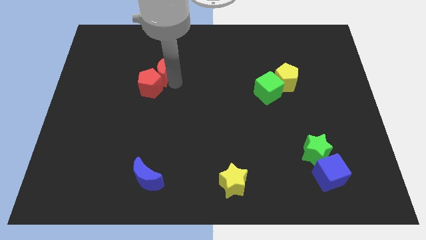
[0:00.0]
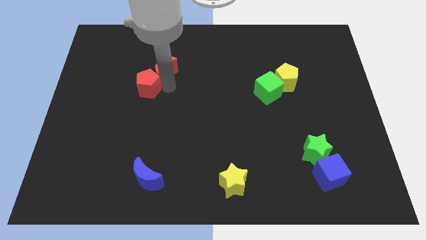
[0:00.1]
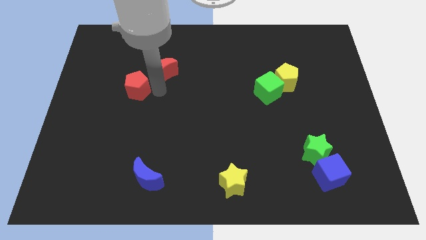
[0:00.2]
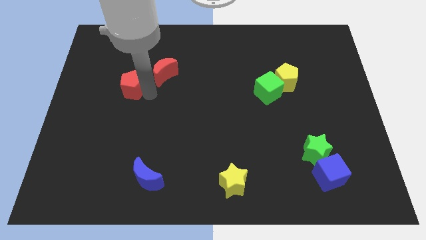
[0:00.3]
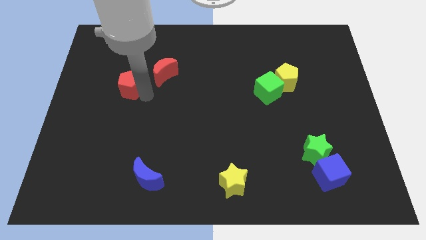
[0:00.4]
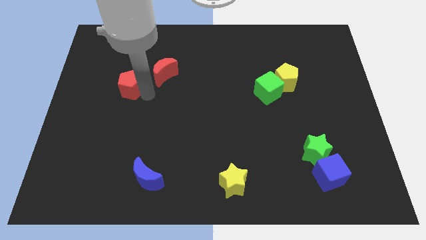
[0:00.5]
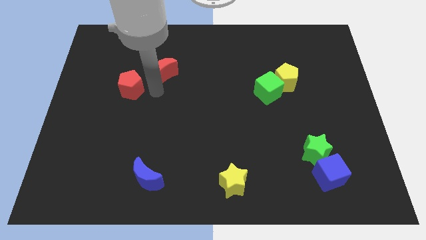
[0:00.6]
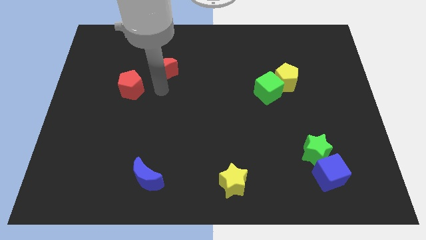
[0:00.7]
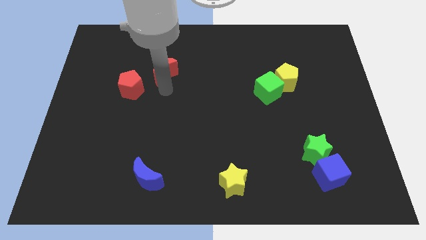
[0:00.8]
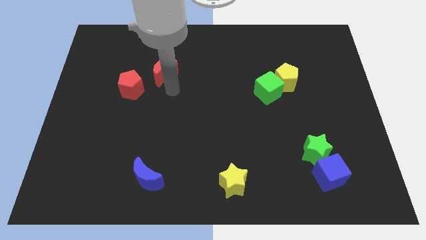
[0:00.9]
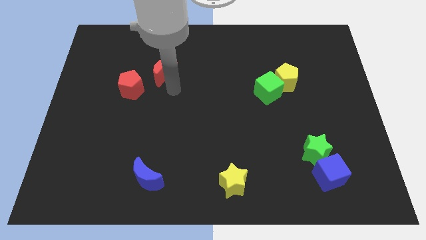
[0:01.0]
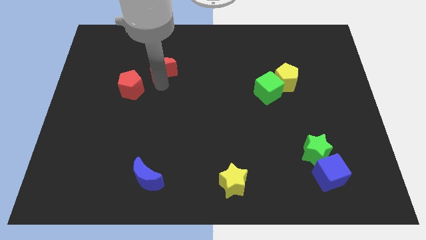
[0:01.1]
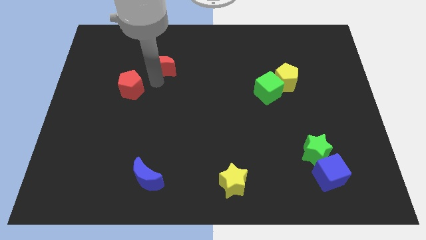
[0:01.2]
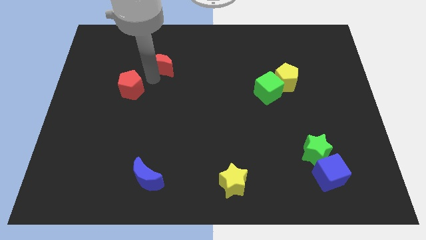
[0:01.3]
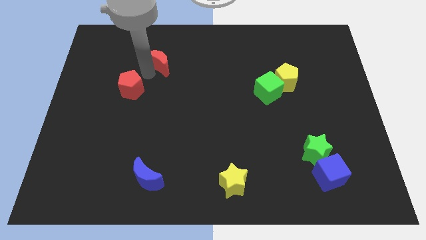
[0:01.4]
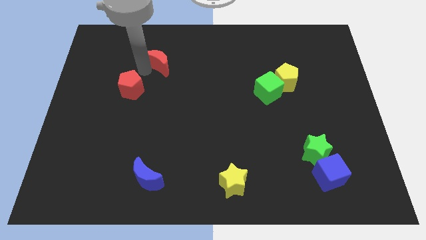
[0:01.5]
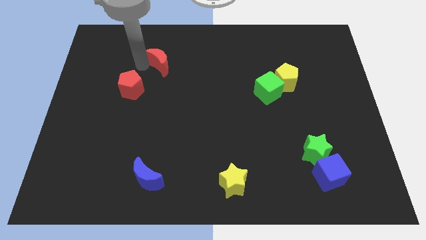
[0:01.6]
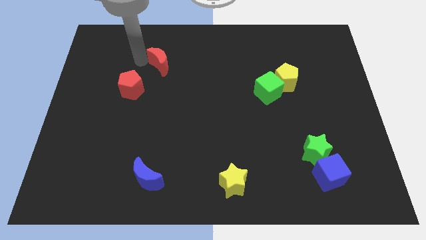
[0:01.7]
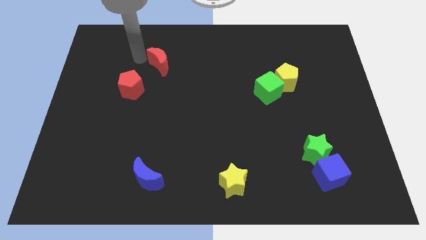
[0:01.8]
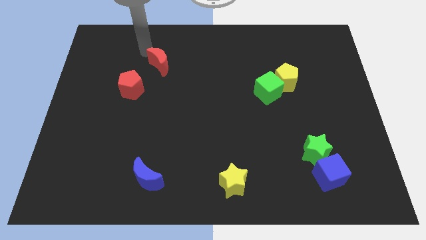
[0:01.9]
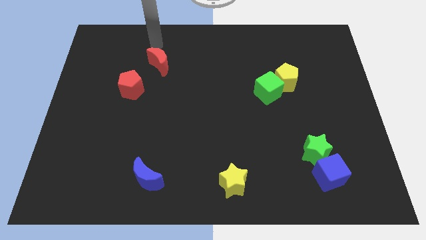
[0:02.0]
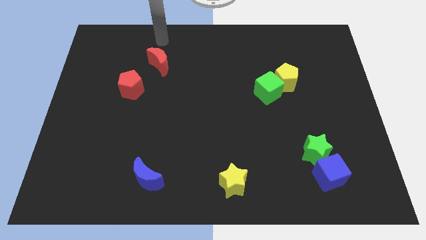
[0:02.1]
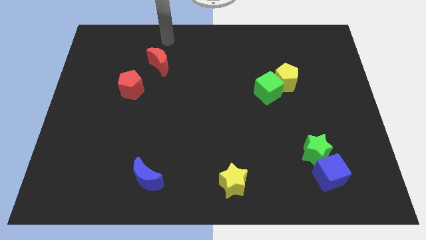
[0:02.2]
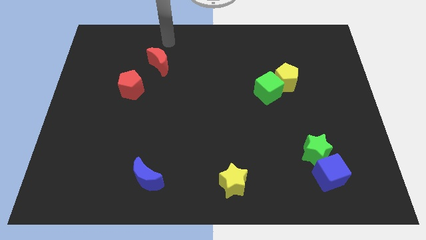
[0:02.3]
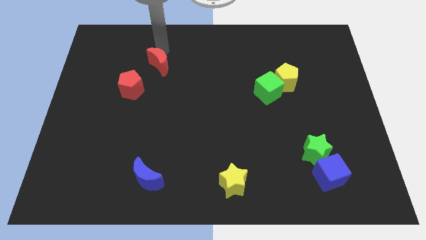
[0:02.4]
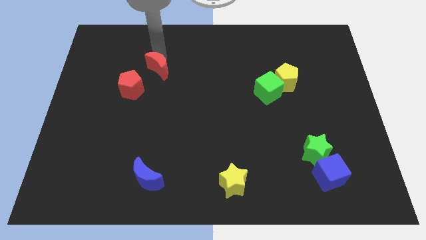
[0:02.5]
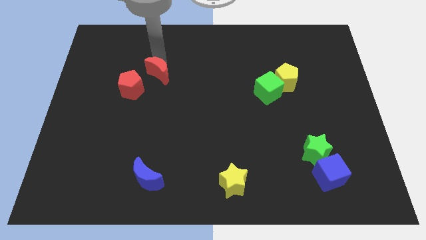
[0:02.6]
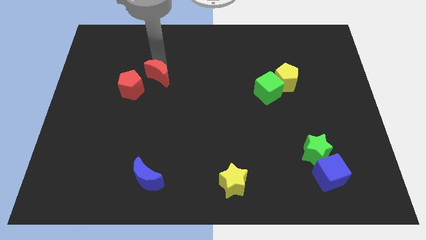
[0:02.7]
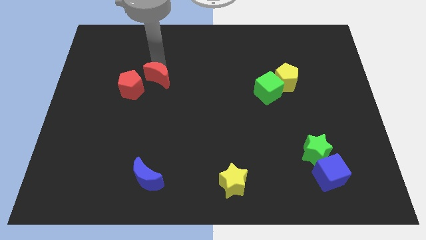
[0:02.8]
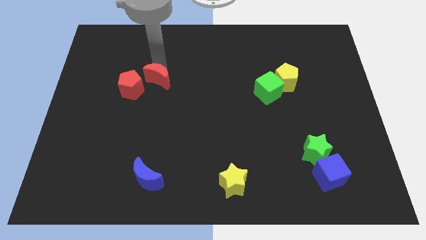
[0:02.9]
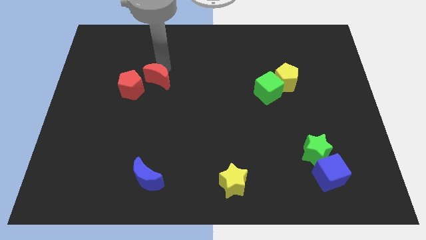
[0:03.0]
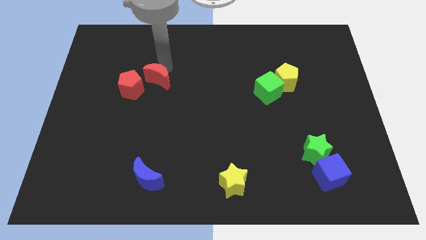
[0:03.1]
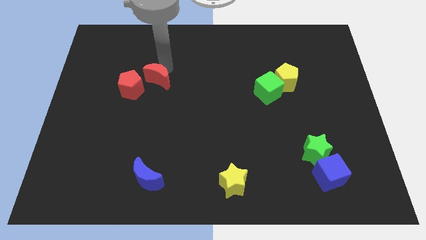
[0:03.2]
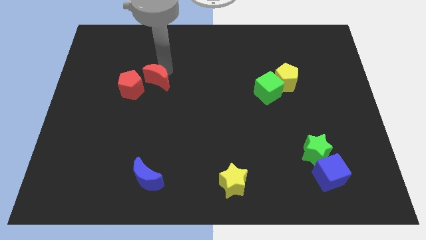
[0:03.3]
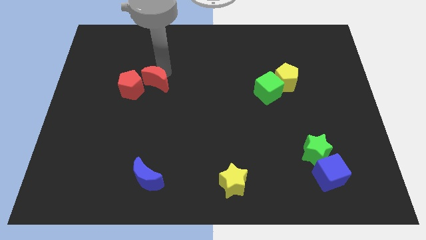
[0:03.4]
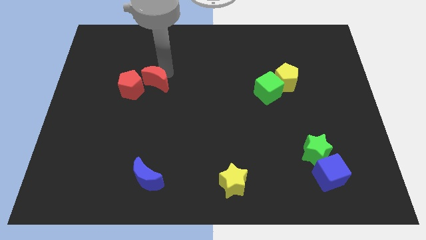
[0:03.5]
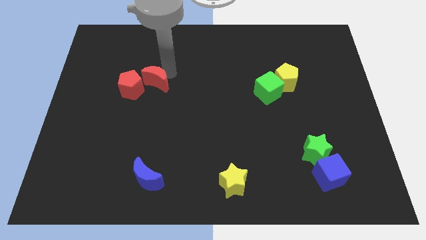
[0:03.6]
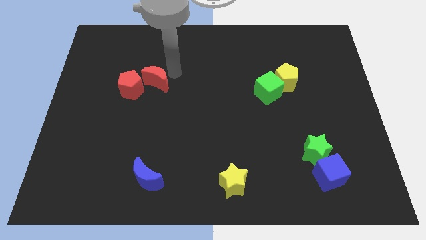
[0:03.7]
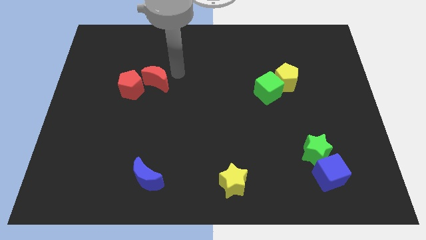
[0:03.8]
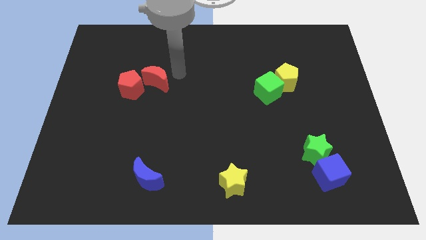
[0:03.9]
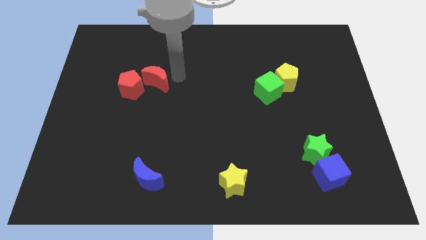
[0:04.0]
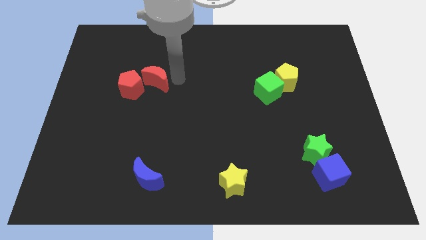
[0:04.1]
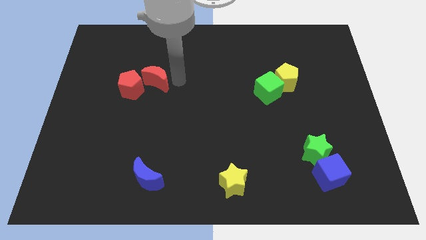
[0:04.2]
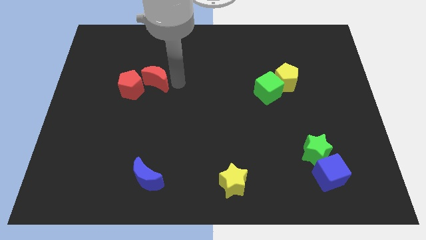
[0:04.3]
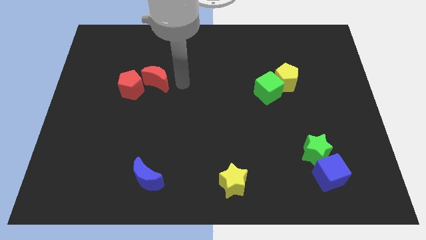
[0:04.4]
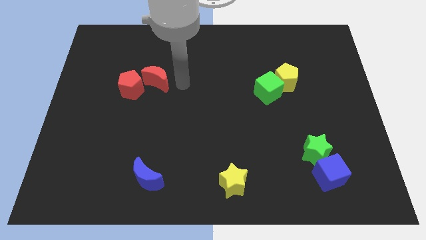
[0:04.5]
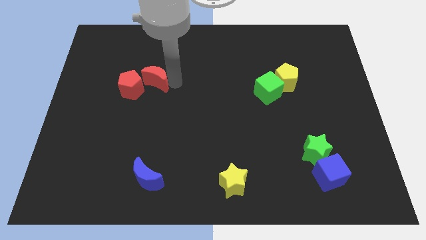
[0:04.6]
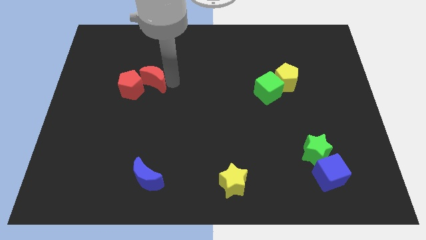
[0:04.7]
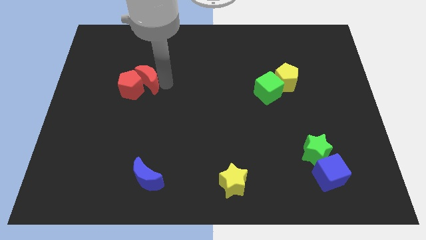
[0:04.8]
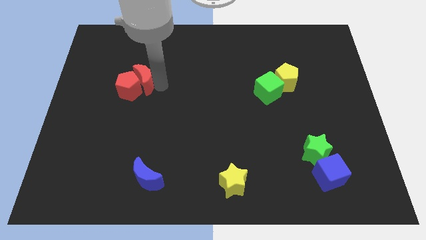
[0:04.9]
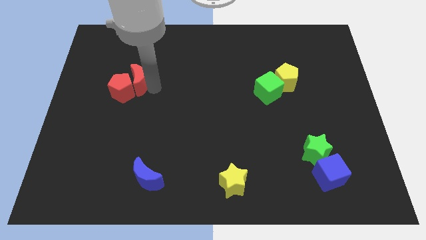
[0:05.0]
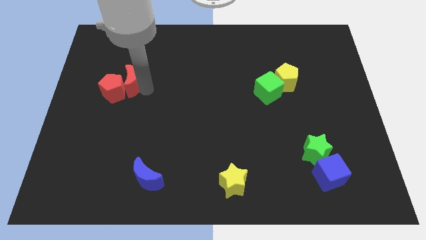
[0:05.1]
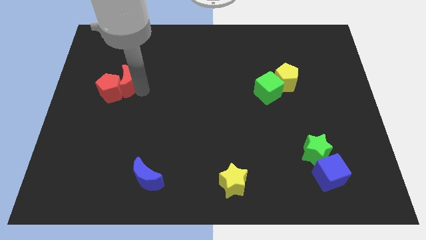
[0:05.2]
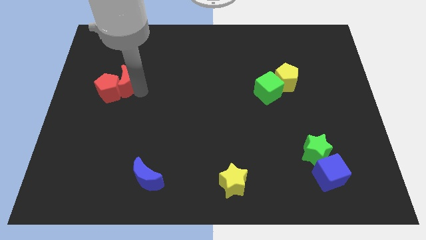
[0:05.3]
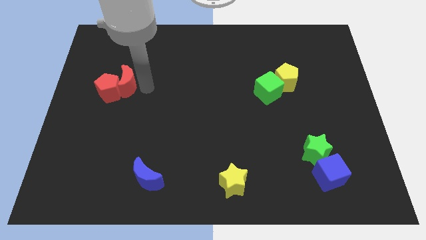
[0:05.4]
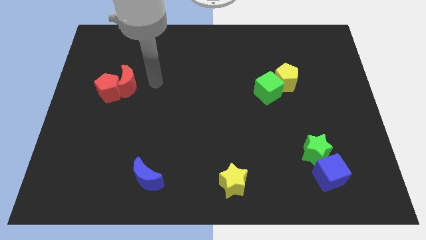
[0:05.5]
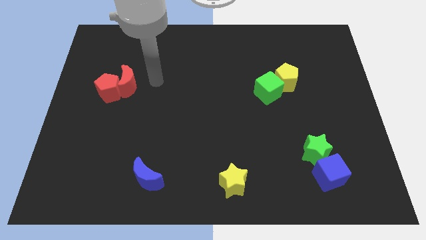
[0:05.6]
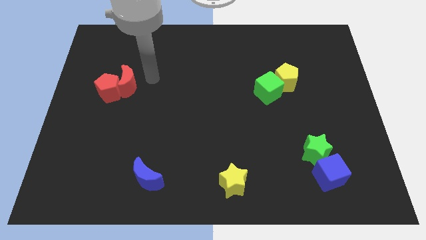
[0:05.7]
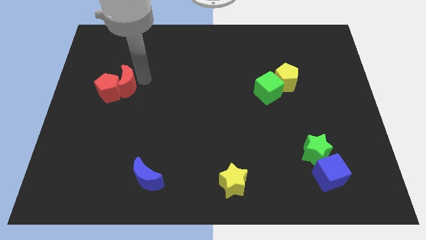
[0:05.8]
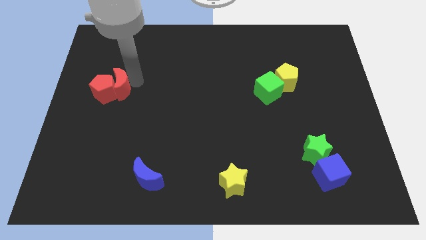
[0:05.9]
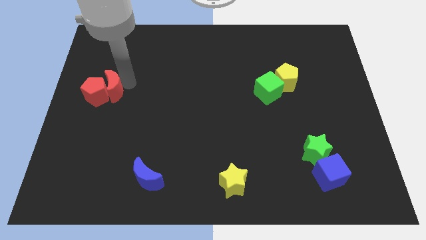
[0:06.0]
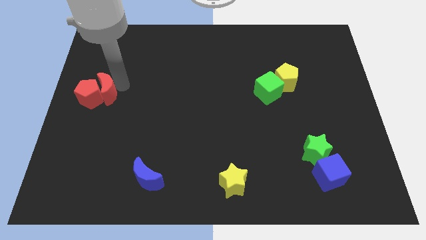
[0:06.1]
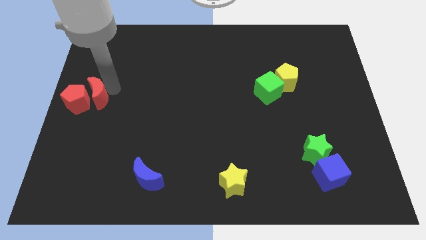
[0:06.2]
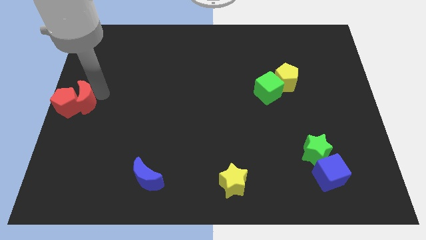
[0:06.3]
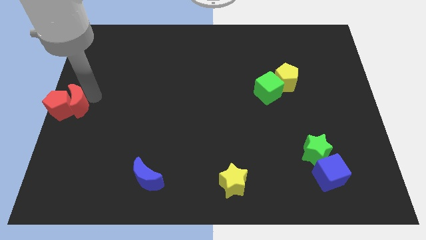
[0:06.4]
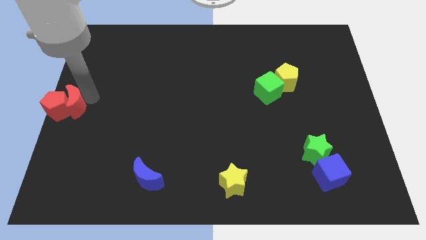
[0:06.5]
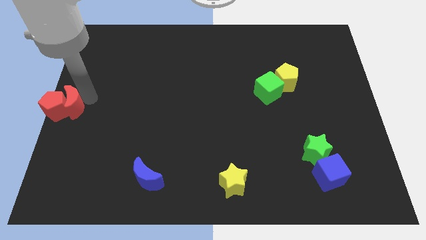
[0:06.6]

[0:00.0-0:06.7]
move red crescent and red pentagon to the left center of the board

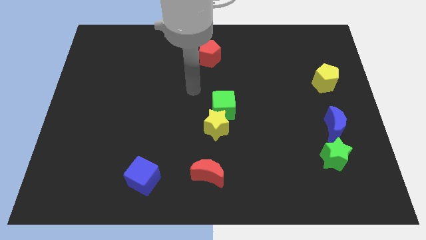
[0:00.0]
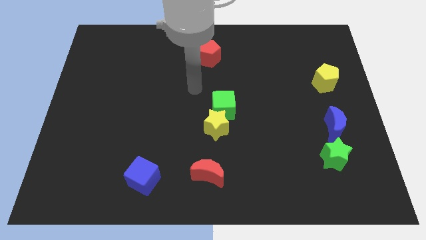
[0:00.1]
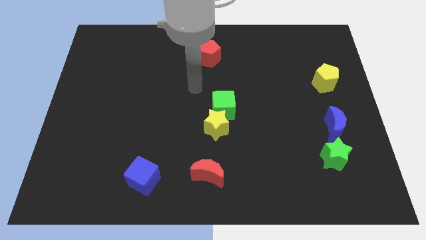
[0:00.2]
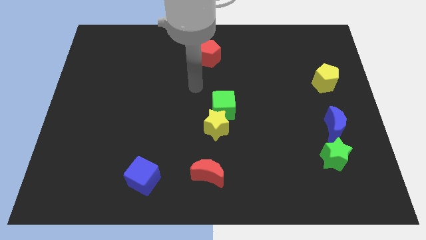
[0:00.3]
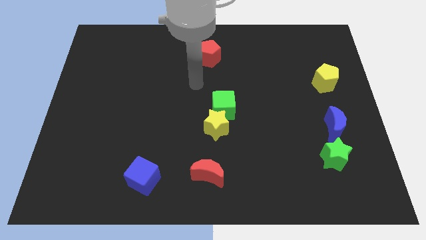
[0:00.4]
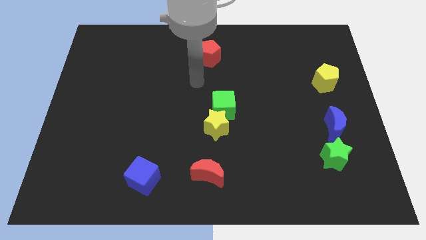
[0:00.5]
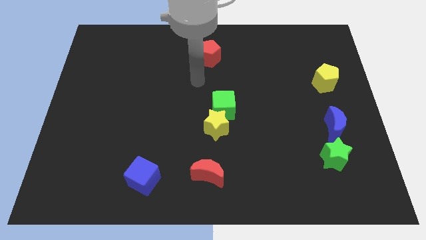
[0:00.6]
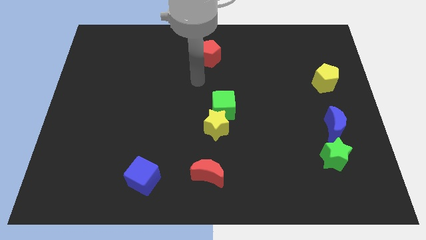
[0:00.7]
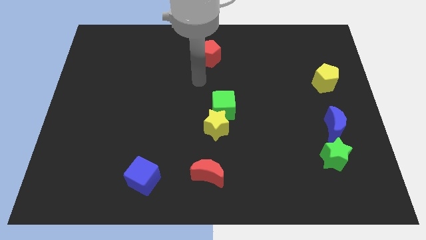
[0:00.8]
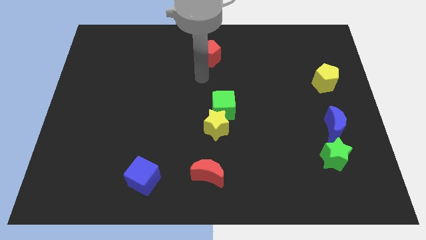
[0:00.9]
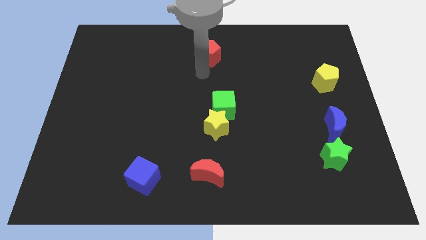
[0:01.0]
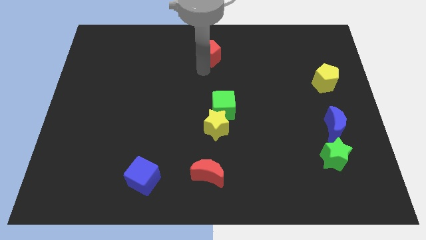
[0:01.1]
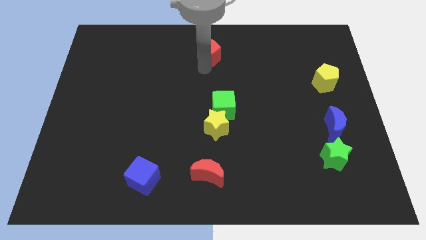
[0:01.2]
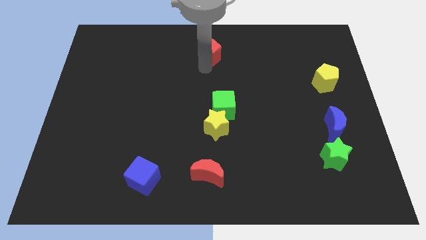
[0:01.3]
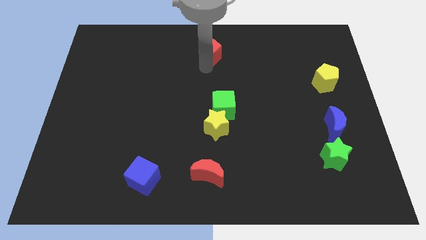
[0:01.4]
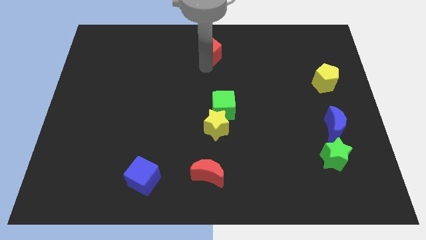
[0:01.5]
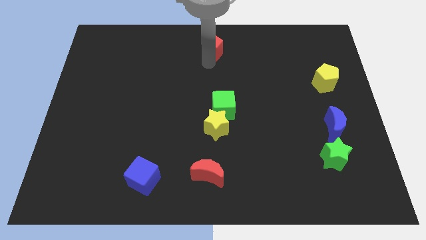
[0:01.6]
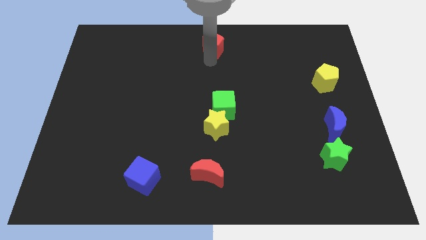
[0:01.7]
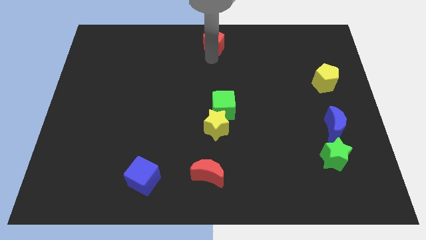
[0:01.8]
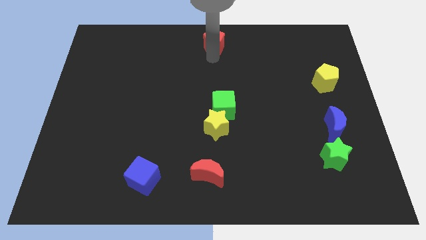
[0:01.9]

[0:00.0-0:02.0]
push the red pentagon slightly to the top of the board

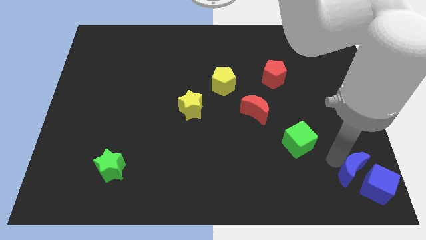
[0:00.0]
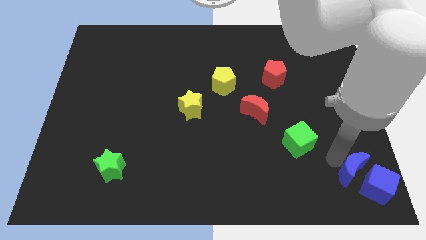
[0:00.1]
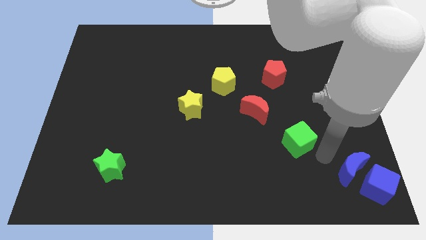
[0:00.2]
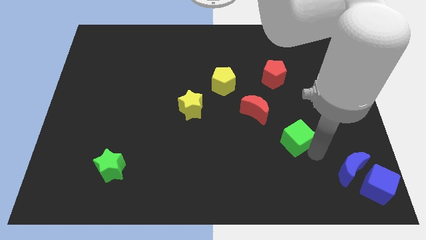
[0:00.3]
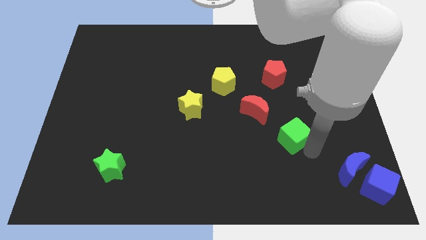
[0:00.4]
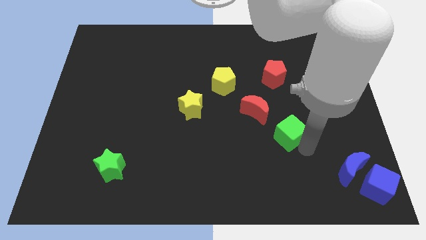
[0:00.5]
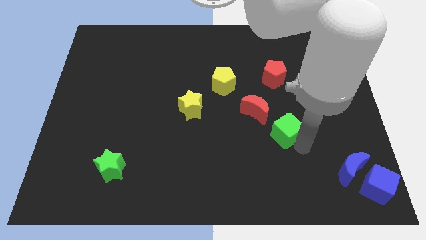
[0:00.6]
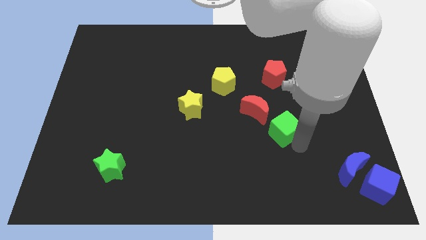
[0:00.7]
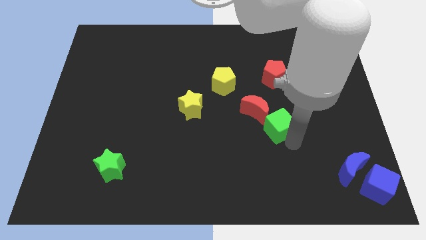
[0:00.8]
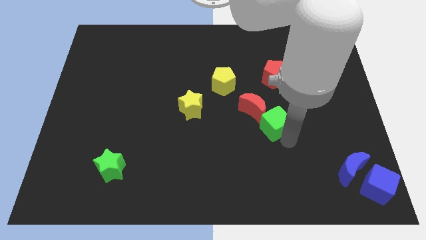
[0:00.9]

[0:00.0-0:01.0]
push the green cube towards the red moon
